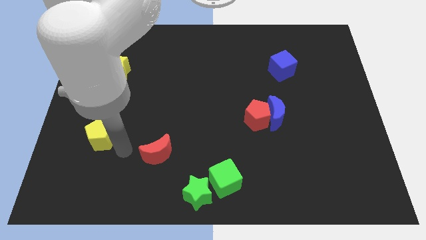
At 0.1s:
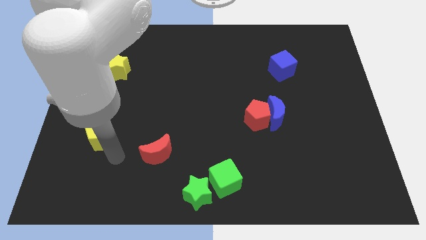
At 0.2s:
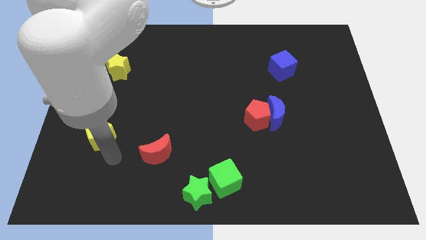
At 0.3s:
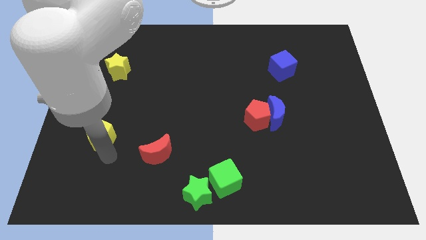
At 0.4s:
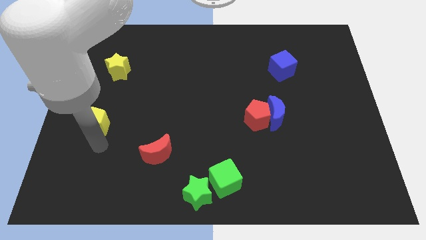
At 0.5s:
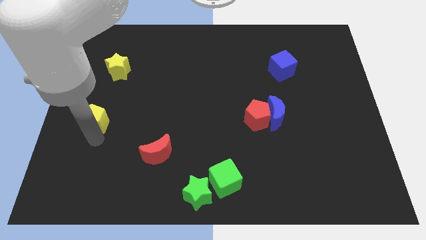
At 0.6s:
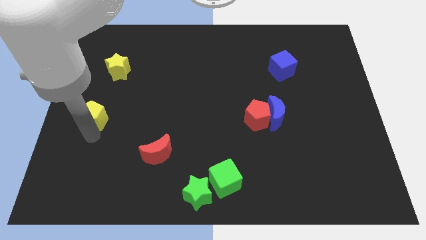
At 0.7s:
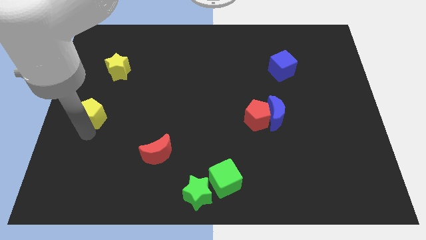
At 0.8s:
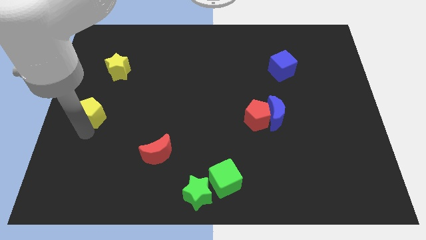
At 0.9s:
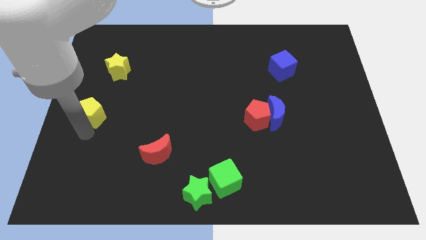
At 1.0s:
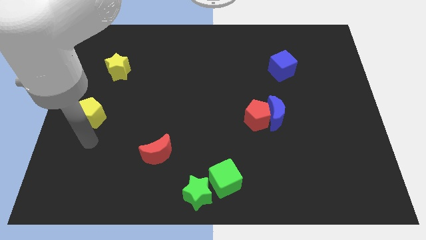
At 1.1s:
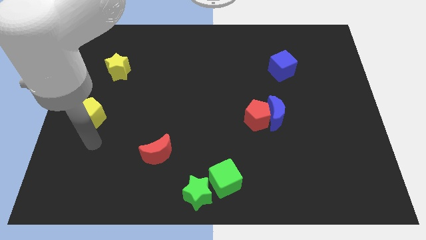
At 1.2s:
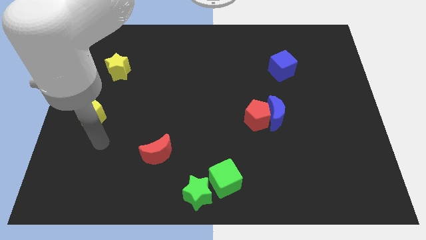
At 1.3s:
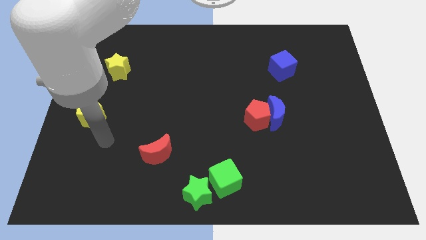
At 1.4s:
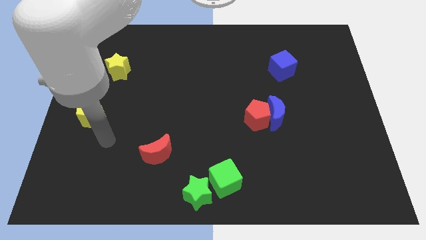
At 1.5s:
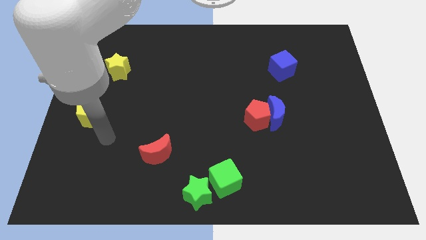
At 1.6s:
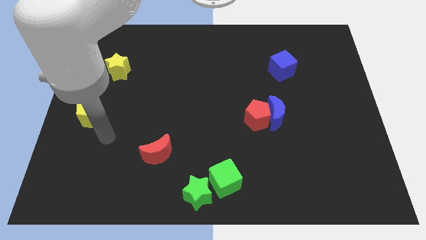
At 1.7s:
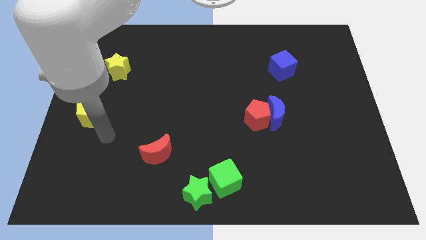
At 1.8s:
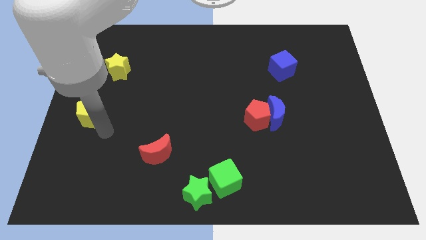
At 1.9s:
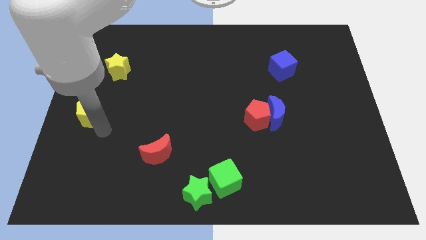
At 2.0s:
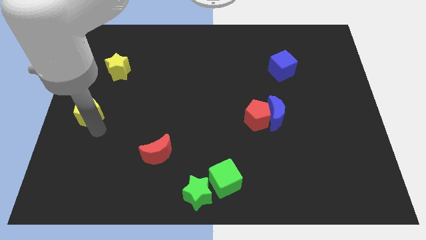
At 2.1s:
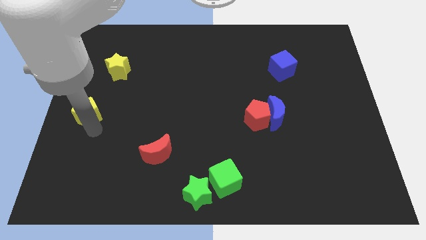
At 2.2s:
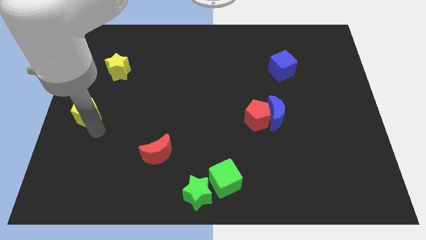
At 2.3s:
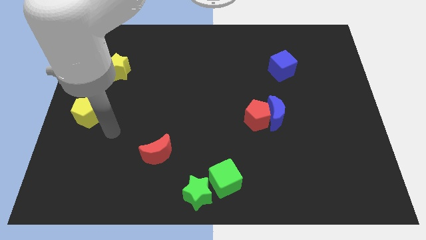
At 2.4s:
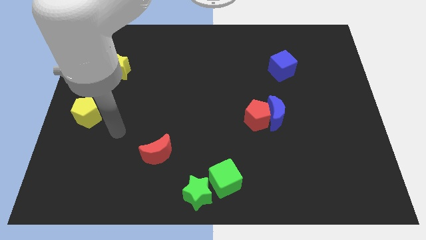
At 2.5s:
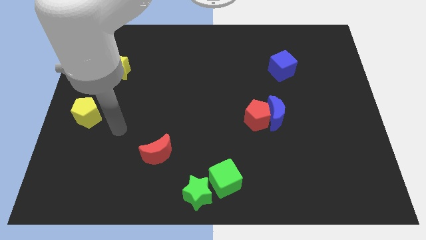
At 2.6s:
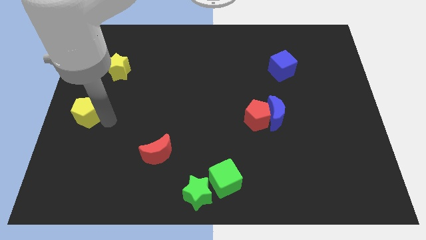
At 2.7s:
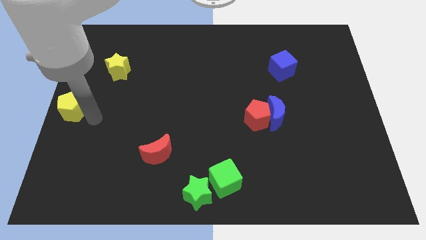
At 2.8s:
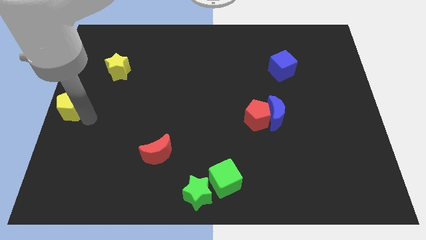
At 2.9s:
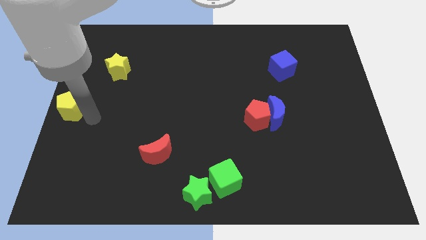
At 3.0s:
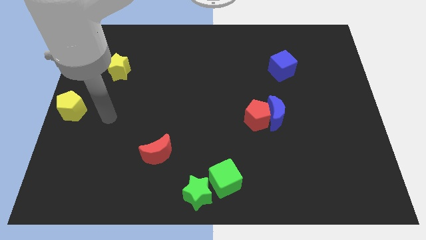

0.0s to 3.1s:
place the yellow pentagon at the center left of the table

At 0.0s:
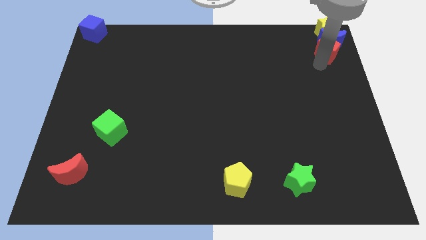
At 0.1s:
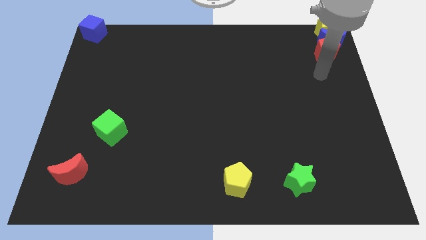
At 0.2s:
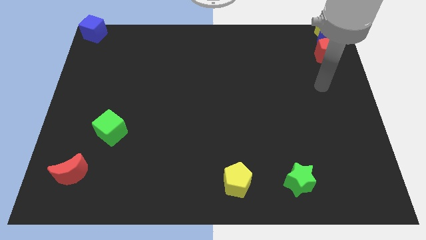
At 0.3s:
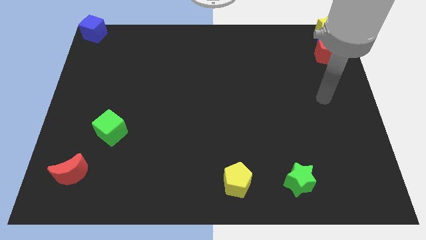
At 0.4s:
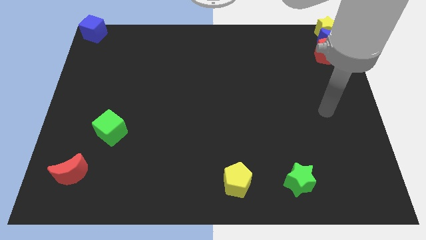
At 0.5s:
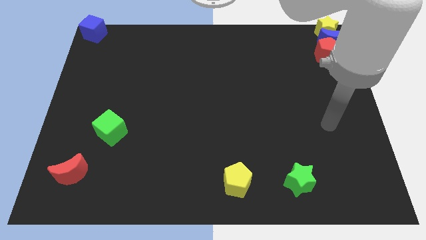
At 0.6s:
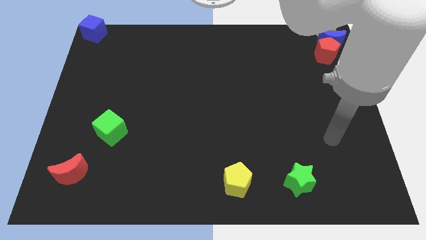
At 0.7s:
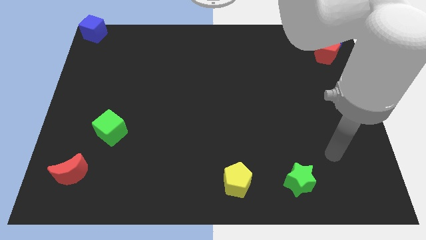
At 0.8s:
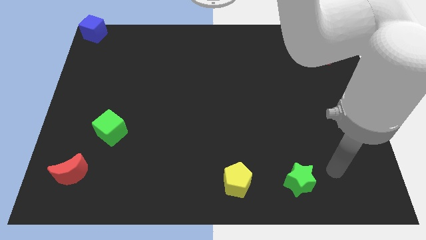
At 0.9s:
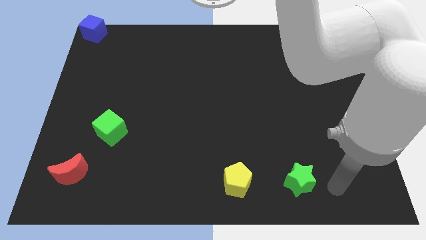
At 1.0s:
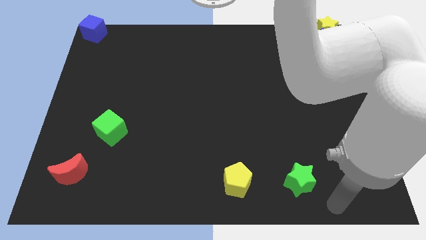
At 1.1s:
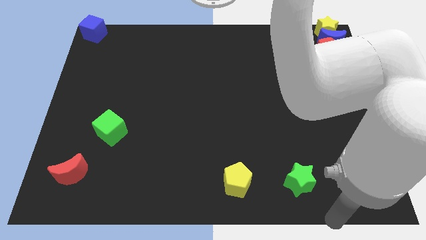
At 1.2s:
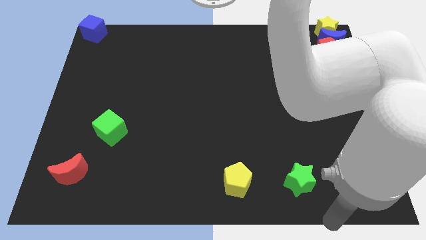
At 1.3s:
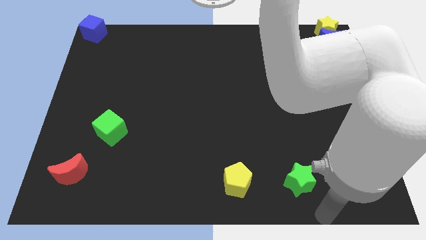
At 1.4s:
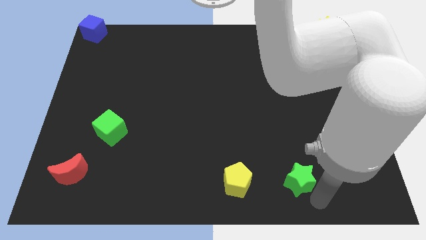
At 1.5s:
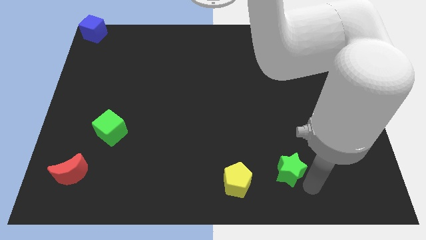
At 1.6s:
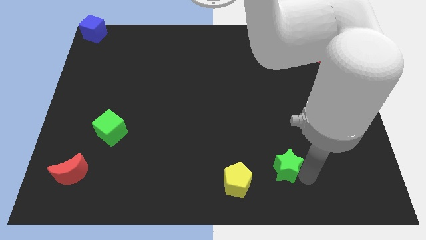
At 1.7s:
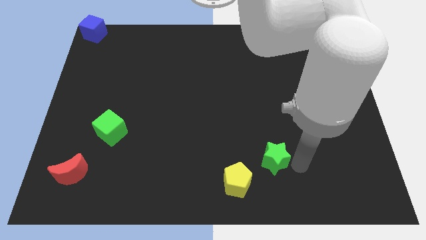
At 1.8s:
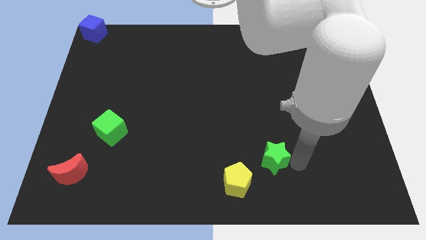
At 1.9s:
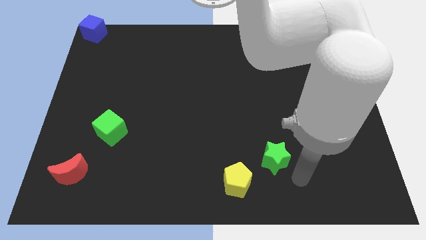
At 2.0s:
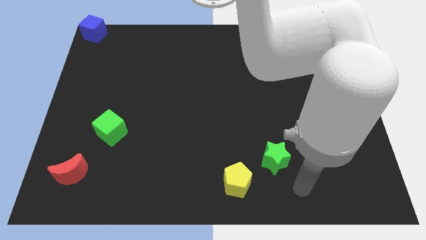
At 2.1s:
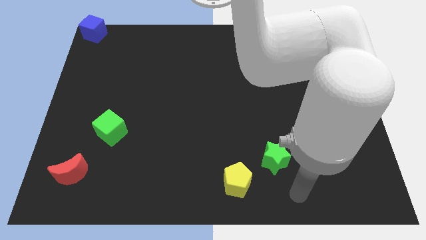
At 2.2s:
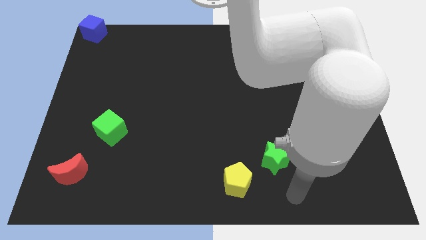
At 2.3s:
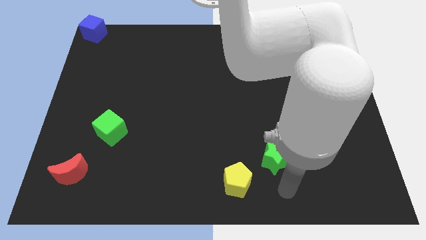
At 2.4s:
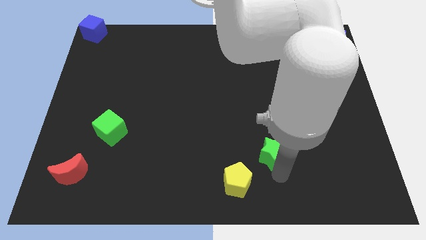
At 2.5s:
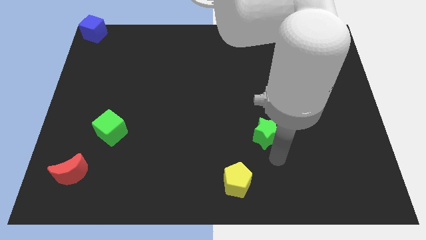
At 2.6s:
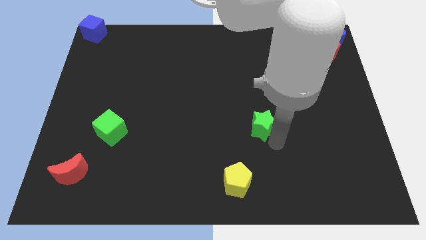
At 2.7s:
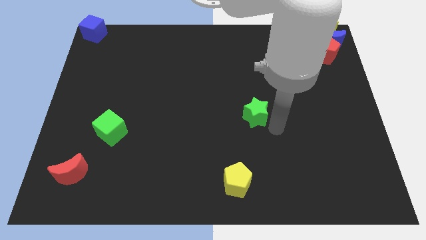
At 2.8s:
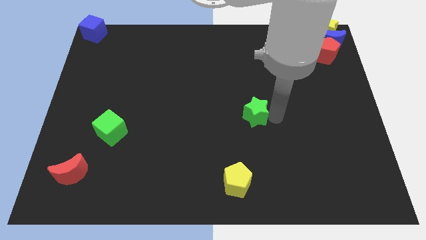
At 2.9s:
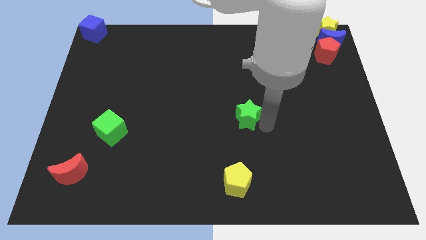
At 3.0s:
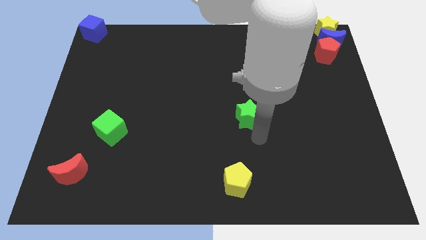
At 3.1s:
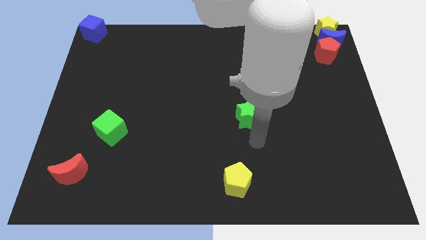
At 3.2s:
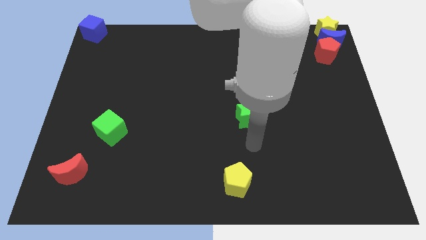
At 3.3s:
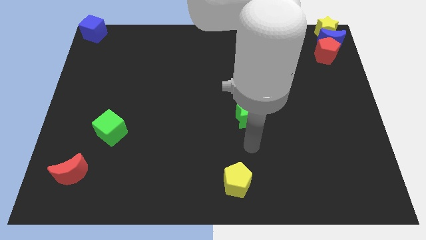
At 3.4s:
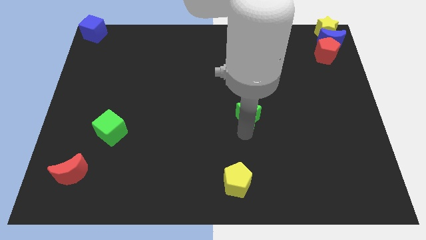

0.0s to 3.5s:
place the green star to the center

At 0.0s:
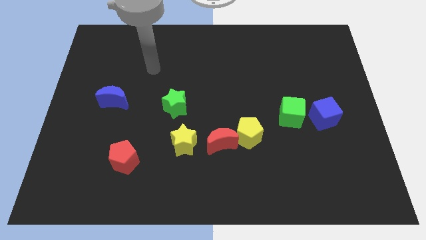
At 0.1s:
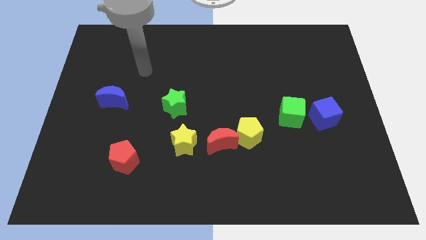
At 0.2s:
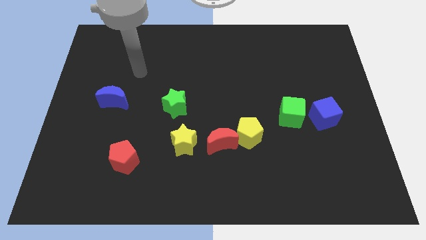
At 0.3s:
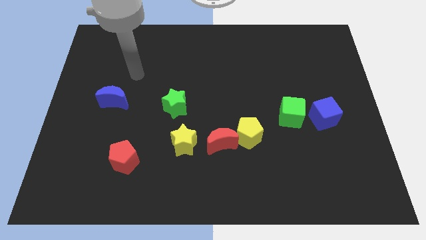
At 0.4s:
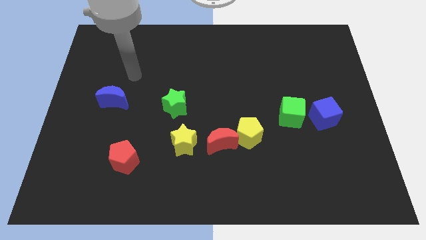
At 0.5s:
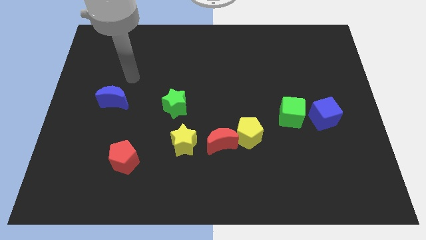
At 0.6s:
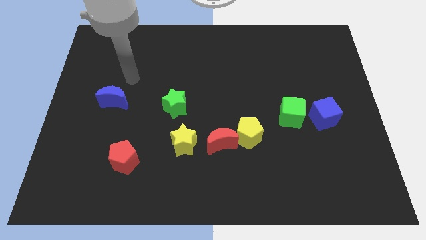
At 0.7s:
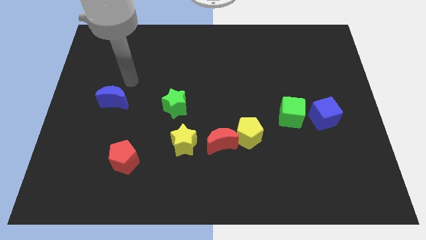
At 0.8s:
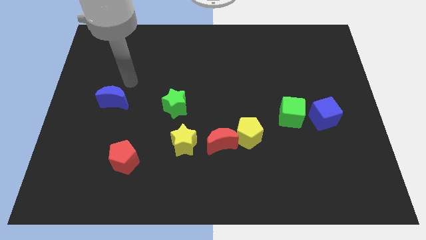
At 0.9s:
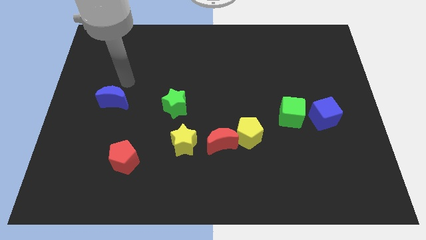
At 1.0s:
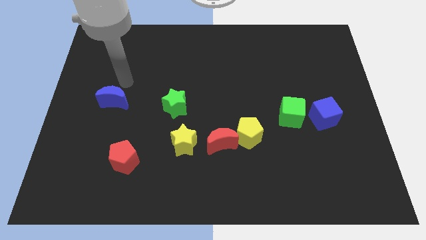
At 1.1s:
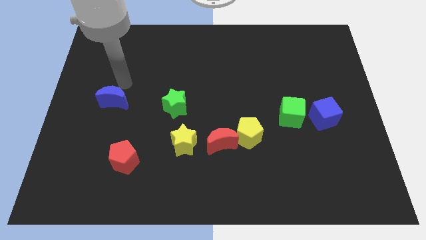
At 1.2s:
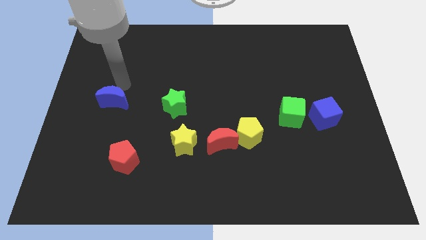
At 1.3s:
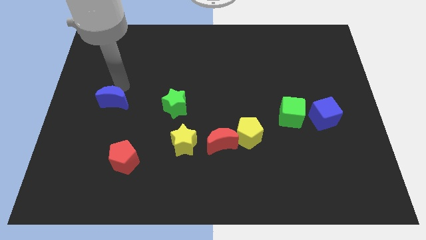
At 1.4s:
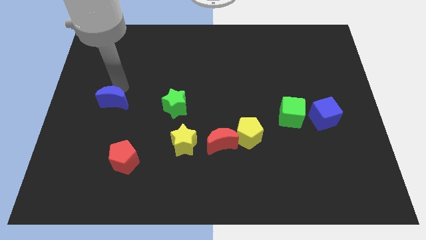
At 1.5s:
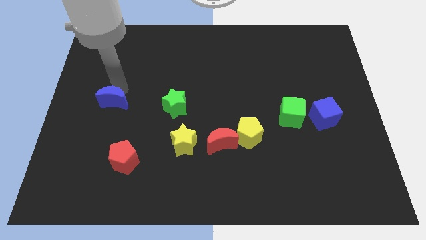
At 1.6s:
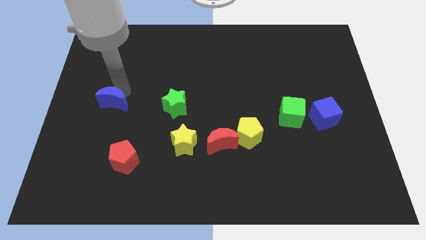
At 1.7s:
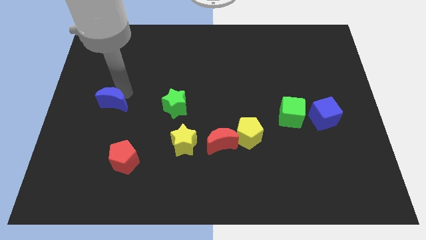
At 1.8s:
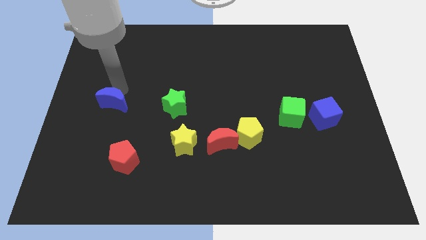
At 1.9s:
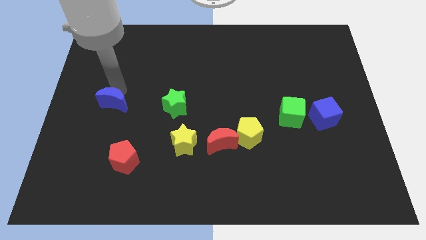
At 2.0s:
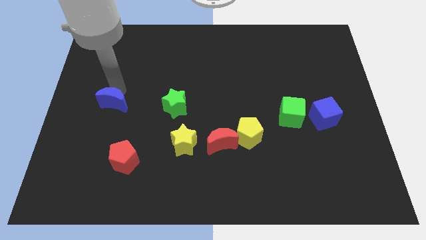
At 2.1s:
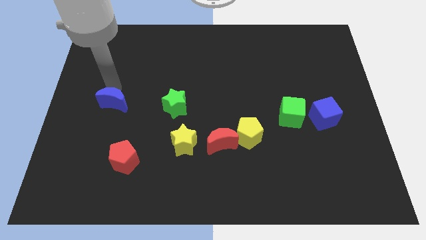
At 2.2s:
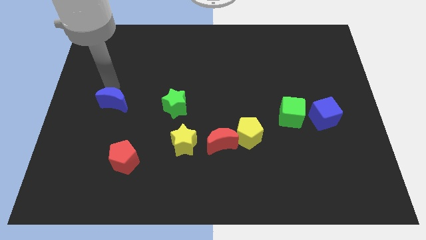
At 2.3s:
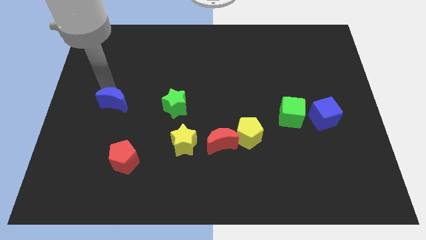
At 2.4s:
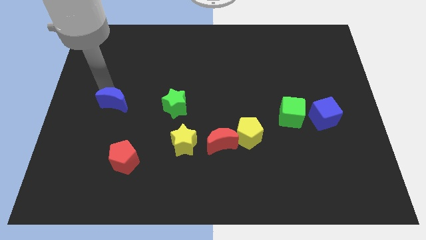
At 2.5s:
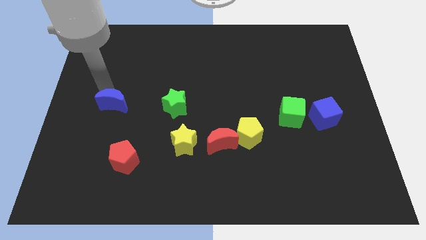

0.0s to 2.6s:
push the blue crescent slightly to the bottom

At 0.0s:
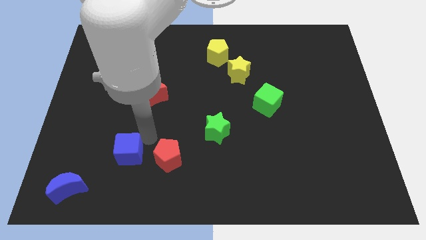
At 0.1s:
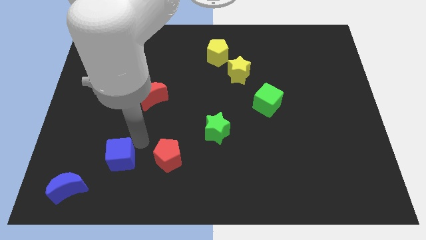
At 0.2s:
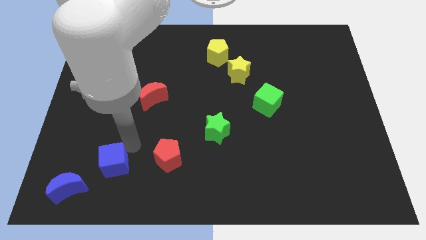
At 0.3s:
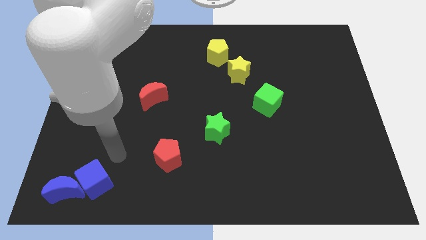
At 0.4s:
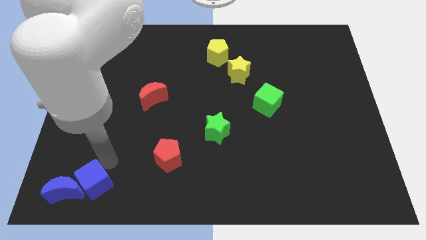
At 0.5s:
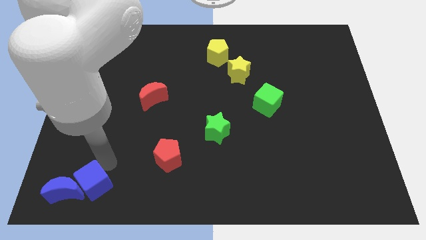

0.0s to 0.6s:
push the blue cube towards the blue crescent
